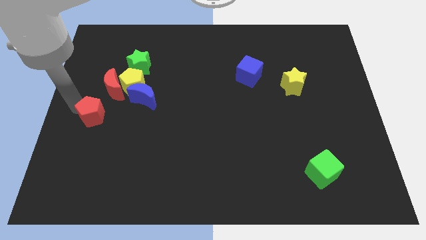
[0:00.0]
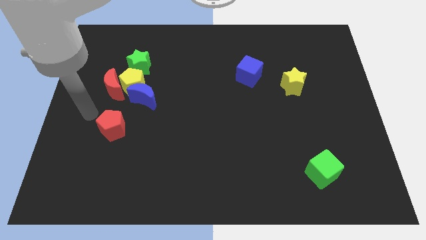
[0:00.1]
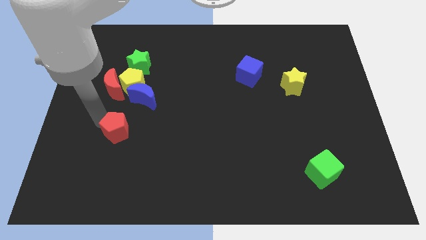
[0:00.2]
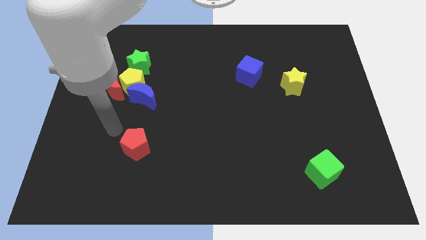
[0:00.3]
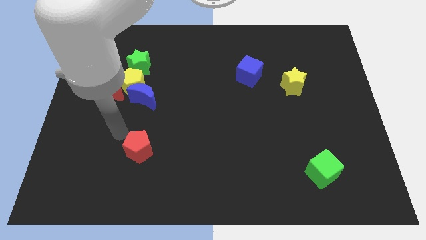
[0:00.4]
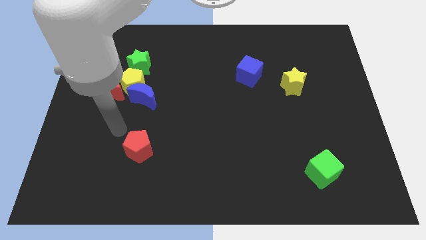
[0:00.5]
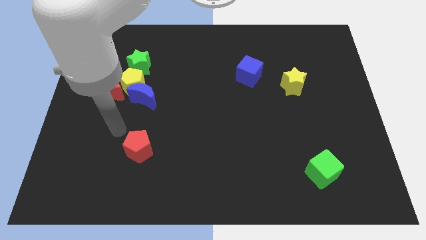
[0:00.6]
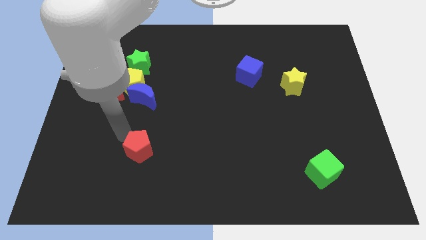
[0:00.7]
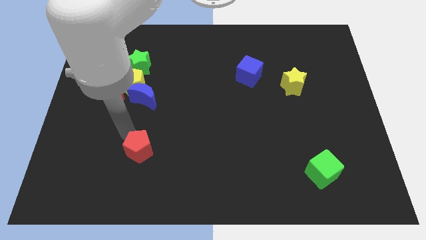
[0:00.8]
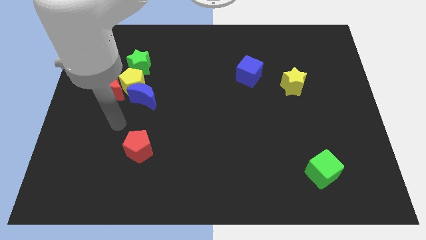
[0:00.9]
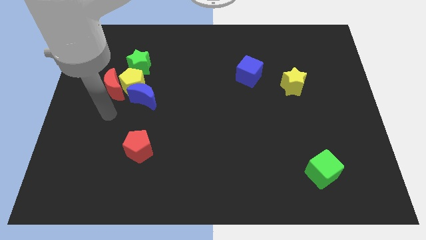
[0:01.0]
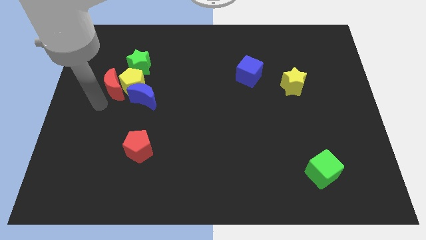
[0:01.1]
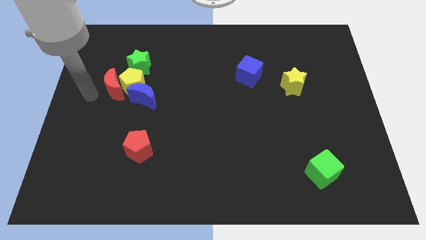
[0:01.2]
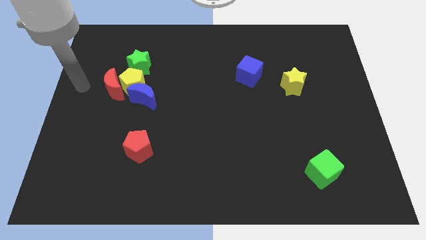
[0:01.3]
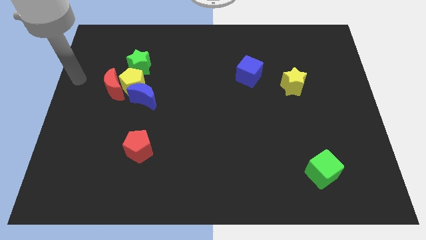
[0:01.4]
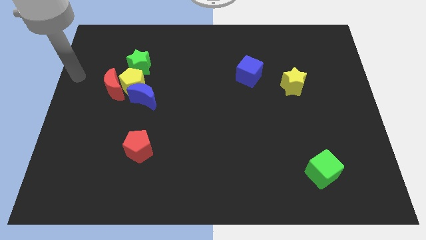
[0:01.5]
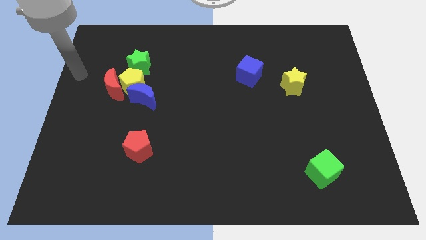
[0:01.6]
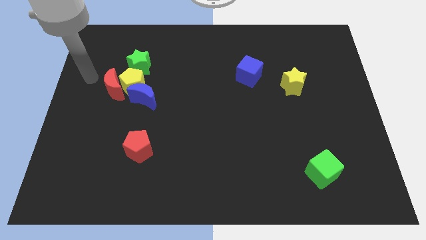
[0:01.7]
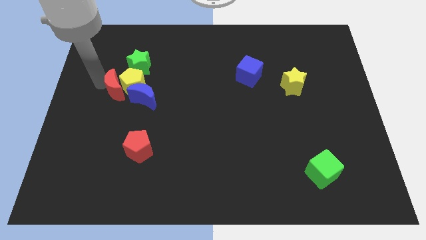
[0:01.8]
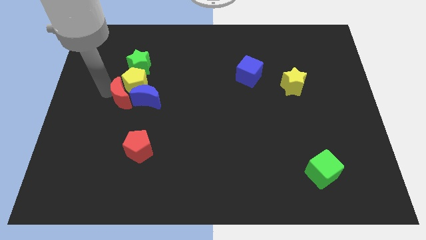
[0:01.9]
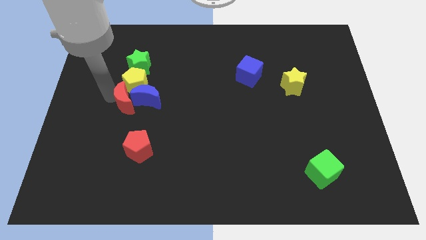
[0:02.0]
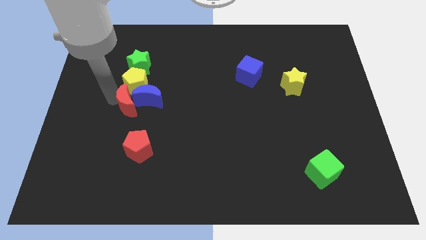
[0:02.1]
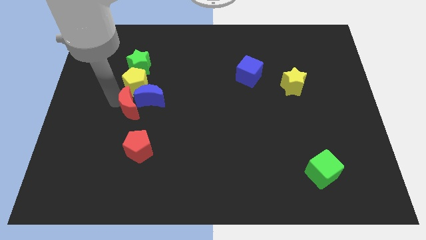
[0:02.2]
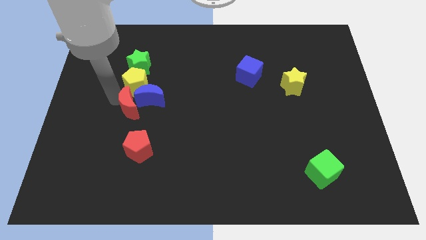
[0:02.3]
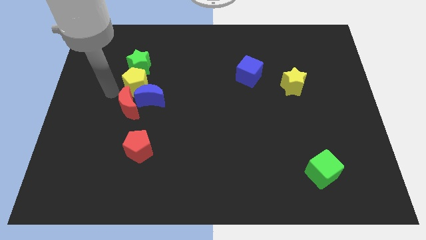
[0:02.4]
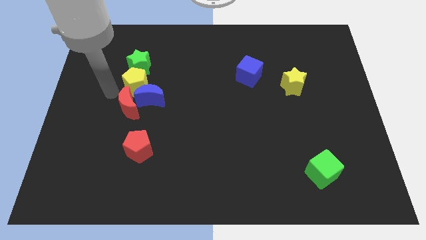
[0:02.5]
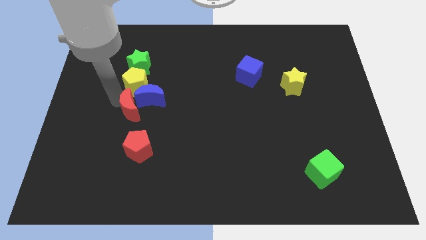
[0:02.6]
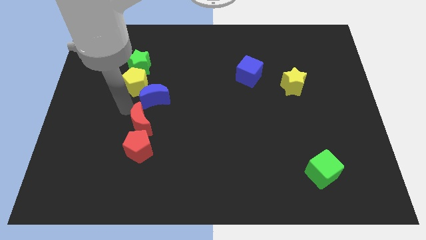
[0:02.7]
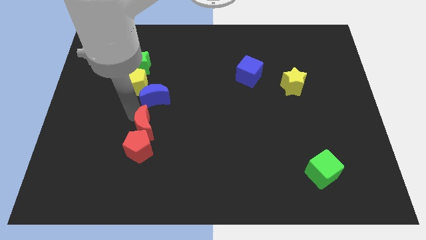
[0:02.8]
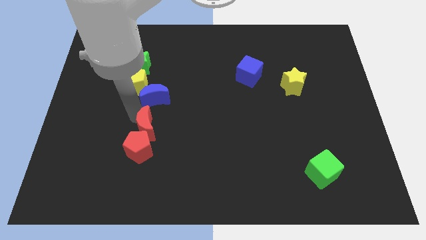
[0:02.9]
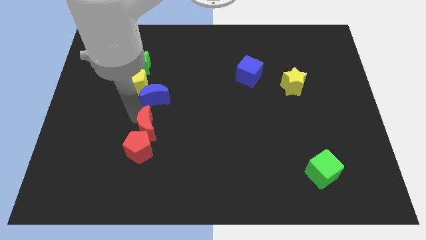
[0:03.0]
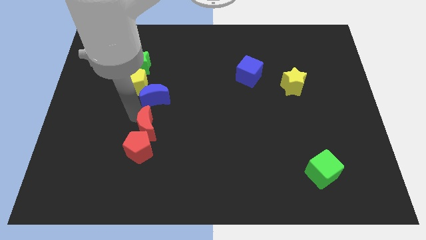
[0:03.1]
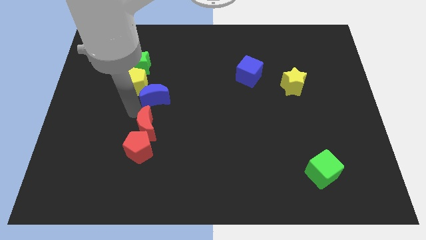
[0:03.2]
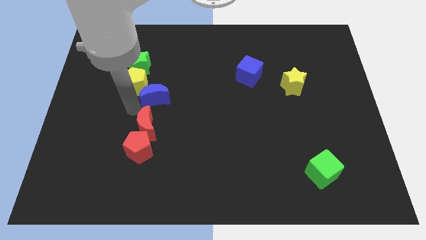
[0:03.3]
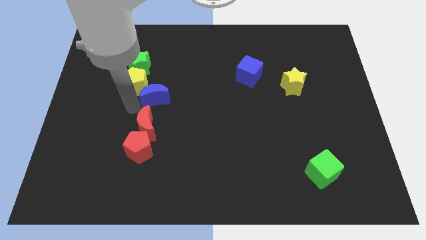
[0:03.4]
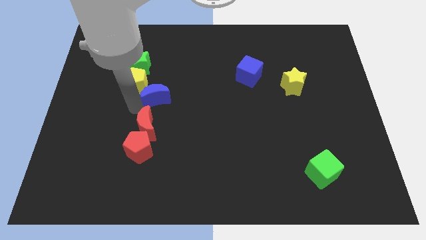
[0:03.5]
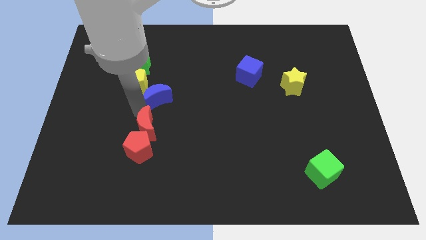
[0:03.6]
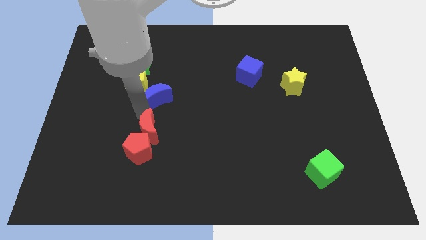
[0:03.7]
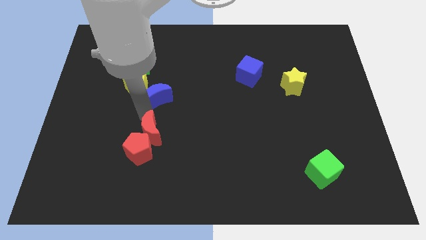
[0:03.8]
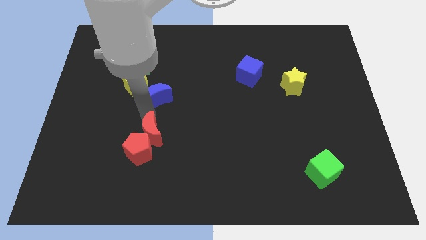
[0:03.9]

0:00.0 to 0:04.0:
push the red pentagon slightly to the right

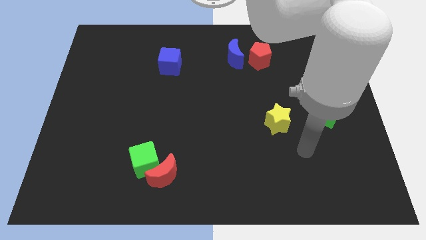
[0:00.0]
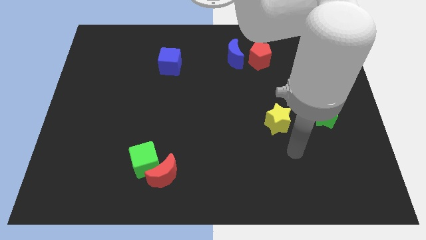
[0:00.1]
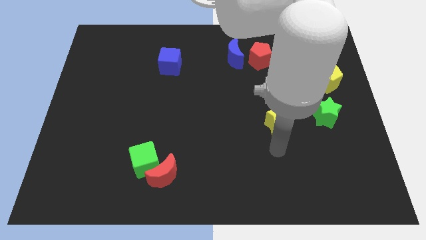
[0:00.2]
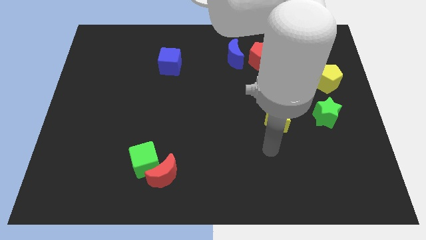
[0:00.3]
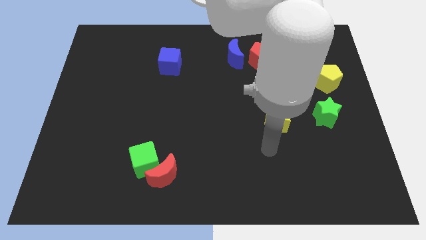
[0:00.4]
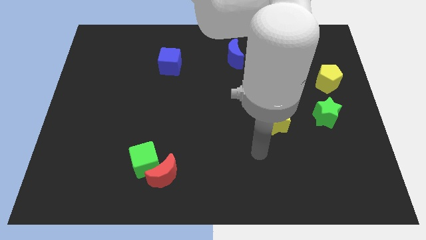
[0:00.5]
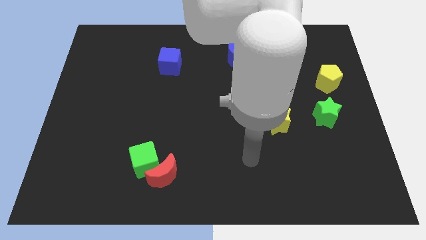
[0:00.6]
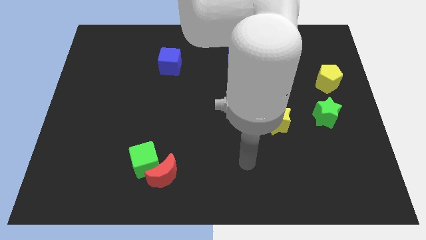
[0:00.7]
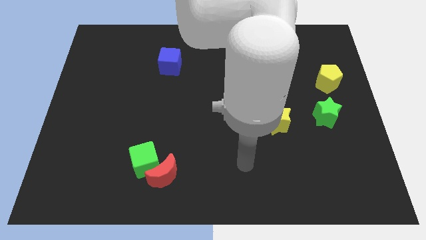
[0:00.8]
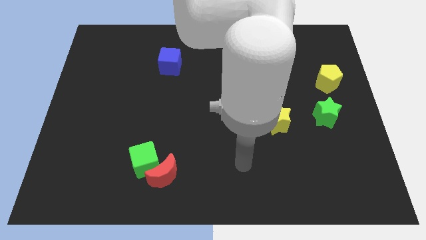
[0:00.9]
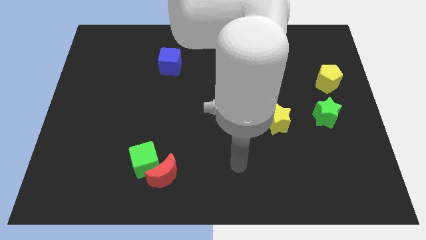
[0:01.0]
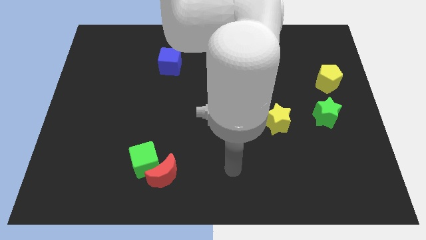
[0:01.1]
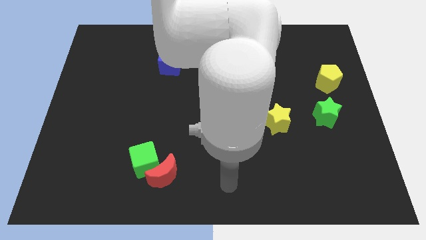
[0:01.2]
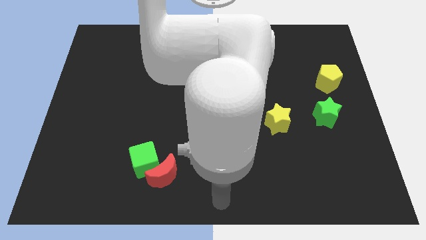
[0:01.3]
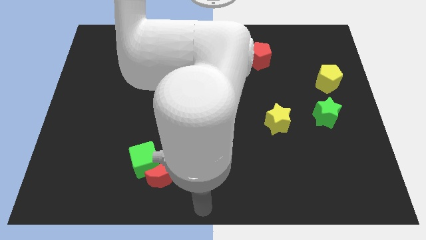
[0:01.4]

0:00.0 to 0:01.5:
put your arm at the bottom center of the board

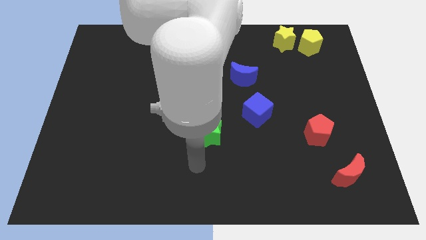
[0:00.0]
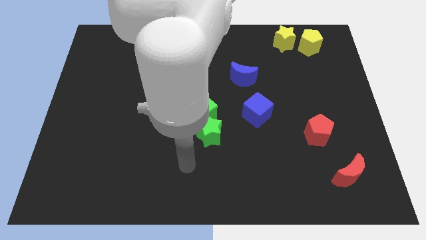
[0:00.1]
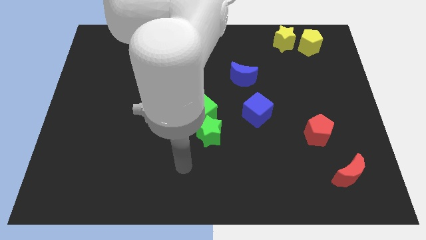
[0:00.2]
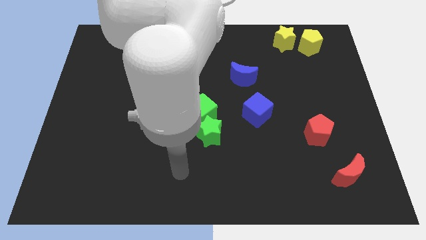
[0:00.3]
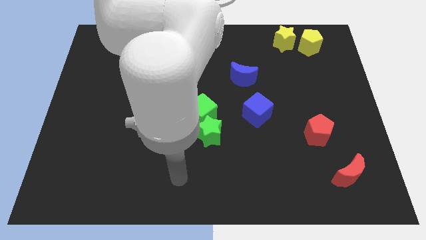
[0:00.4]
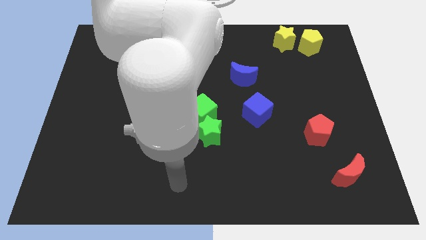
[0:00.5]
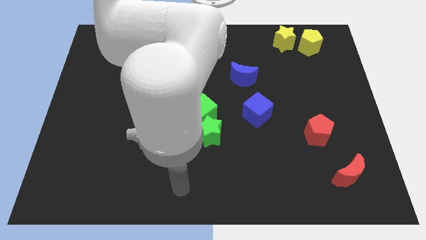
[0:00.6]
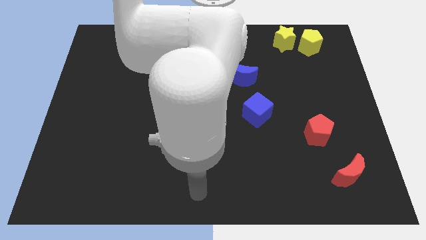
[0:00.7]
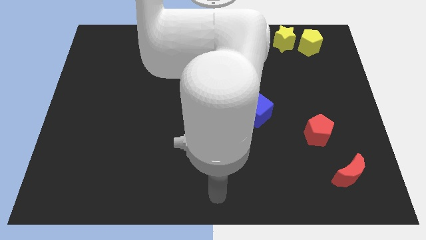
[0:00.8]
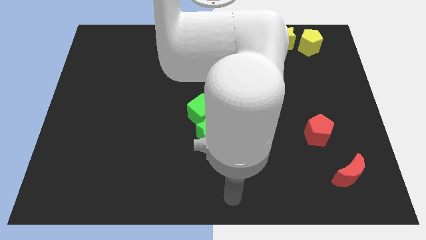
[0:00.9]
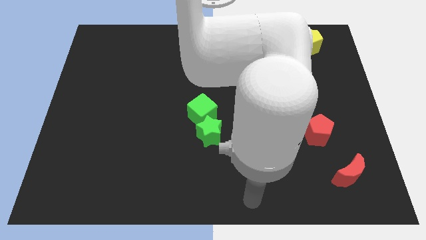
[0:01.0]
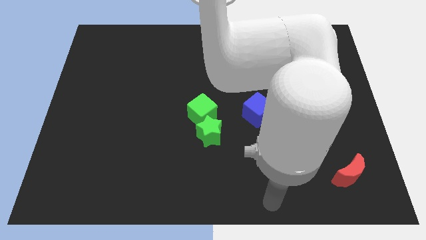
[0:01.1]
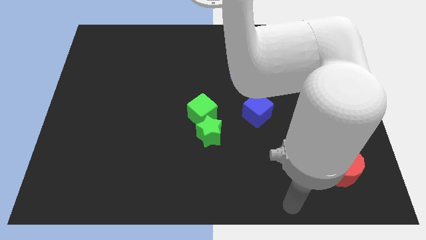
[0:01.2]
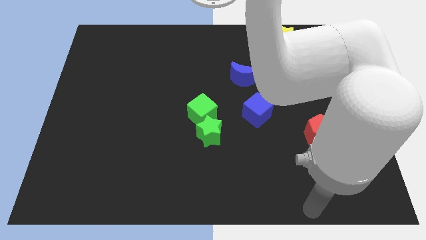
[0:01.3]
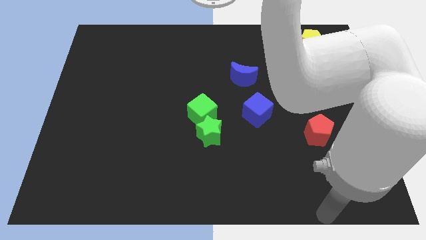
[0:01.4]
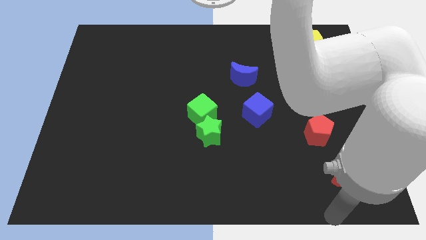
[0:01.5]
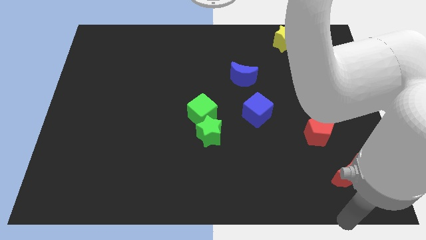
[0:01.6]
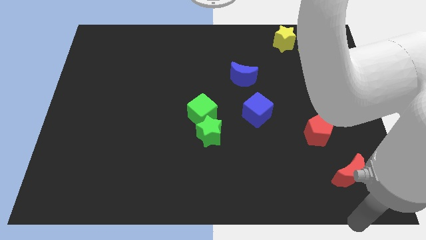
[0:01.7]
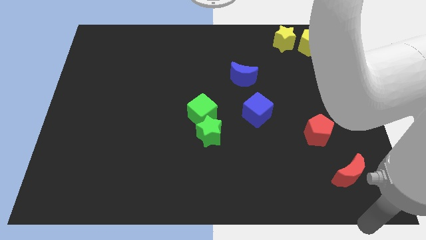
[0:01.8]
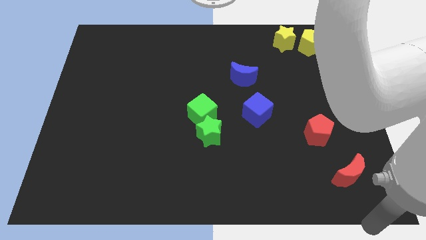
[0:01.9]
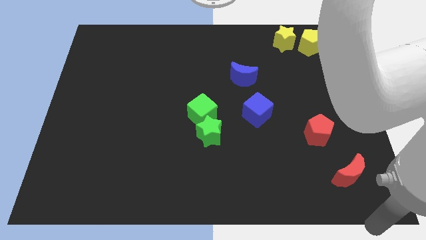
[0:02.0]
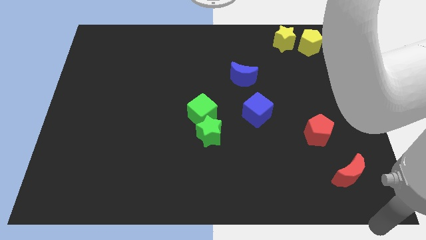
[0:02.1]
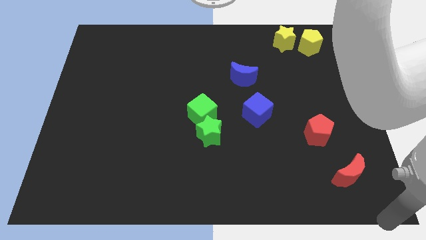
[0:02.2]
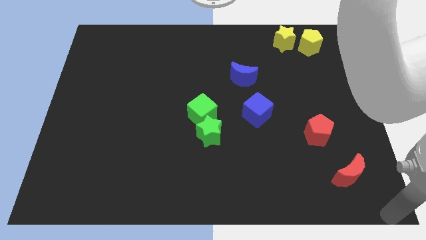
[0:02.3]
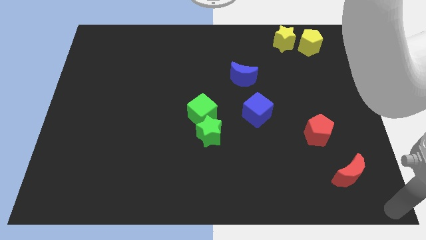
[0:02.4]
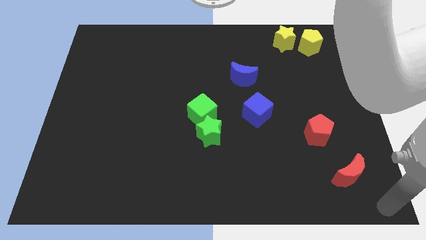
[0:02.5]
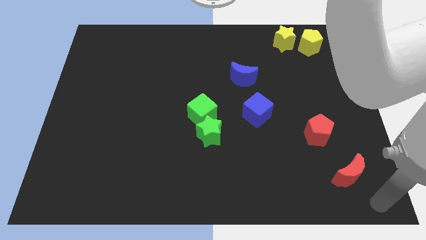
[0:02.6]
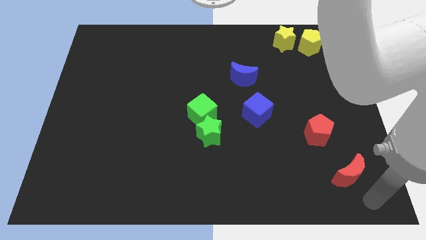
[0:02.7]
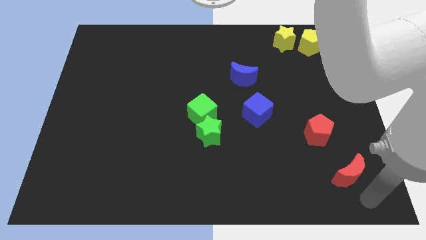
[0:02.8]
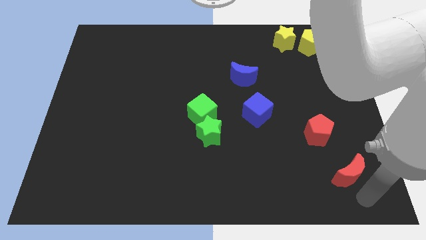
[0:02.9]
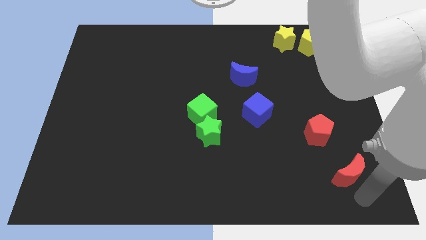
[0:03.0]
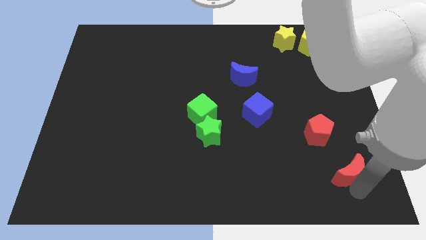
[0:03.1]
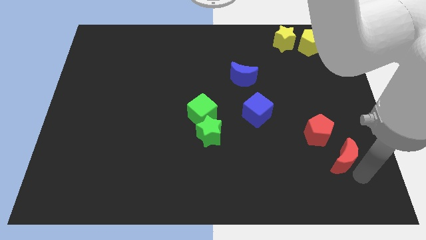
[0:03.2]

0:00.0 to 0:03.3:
move your arm down to the red moon

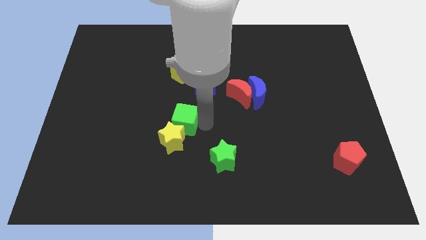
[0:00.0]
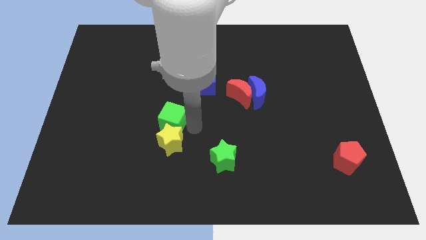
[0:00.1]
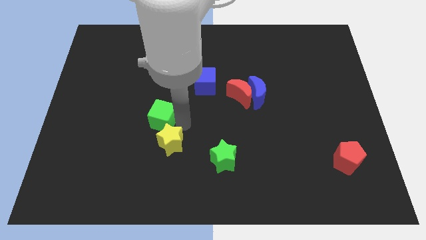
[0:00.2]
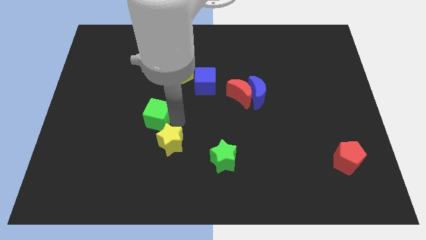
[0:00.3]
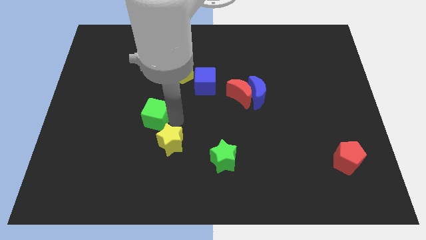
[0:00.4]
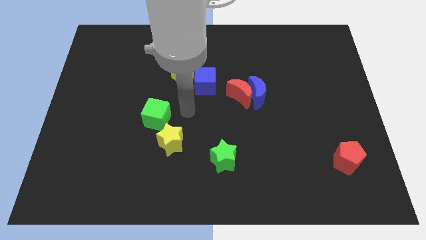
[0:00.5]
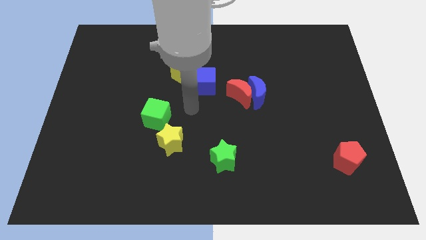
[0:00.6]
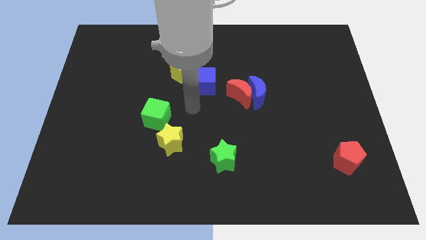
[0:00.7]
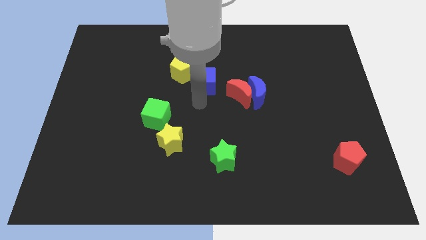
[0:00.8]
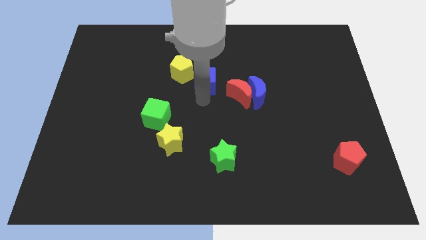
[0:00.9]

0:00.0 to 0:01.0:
push the green cube to the left of the board
